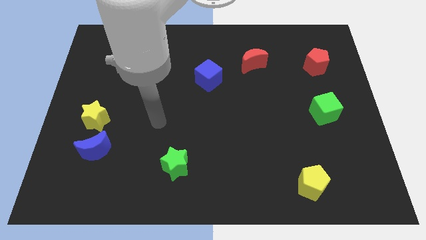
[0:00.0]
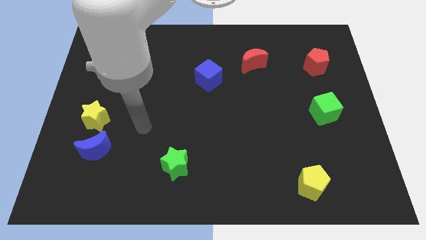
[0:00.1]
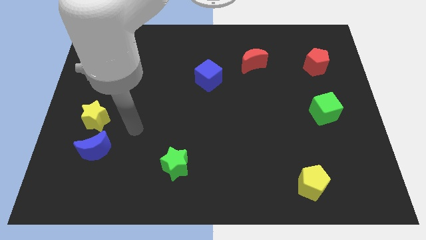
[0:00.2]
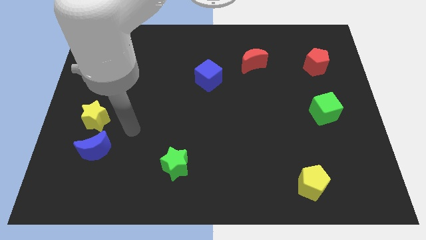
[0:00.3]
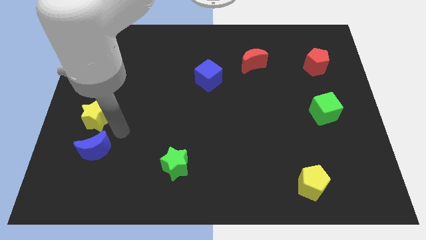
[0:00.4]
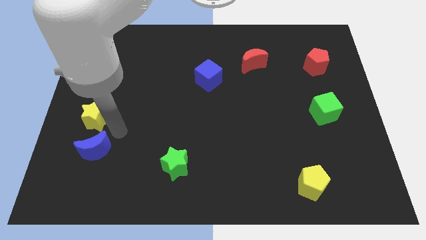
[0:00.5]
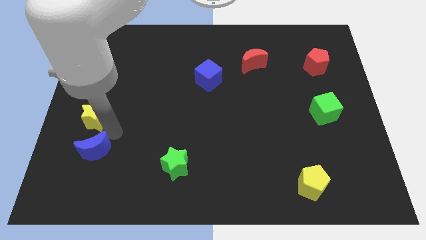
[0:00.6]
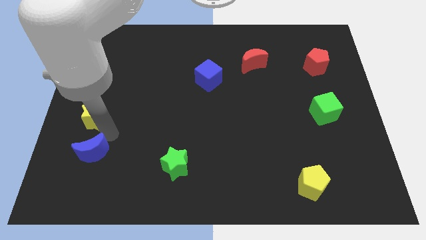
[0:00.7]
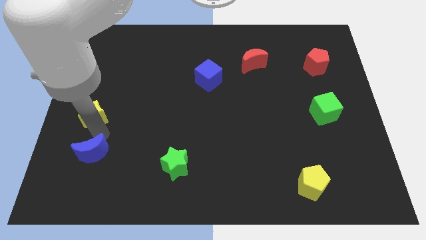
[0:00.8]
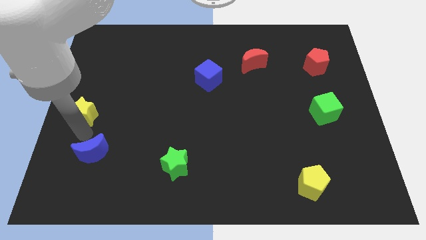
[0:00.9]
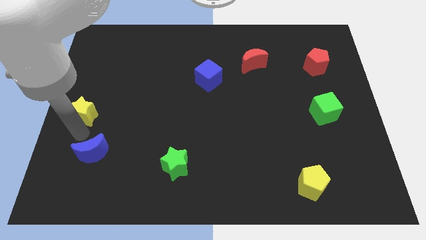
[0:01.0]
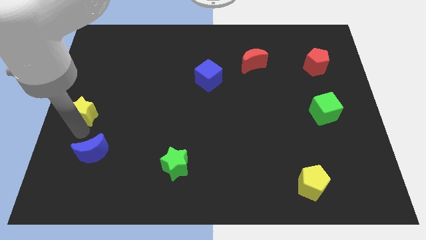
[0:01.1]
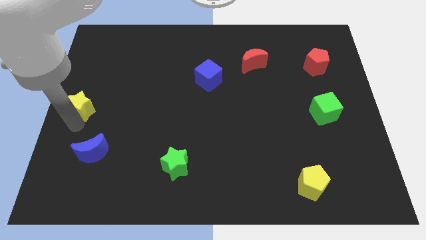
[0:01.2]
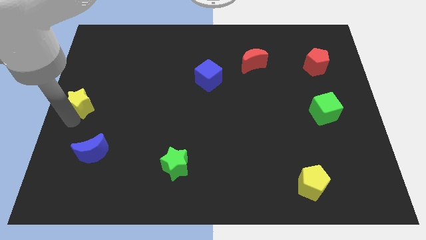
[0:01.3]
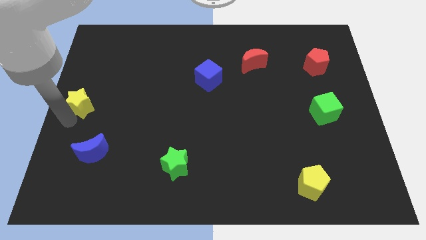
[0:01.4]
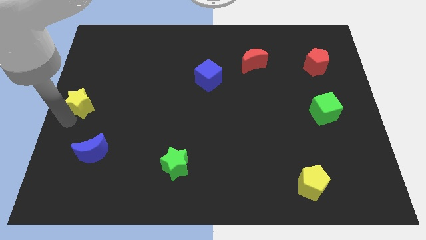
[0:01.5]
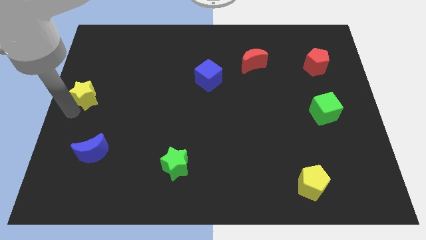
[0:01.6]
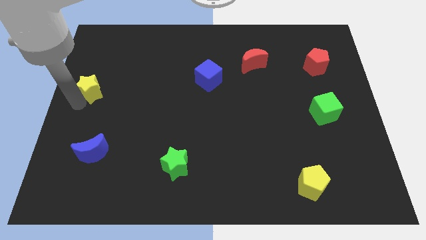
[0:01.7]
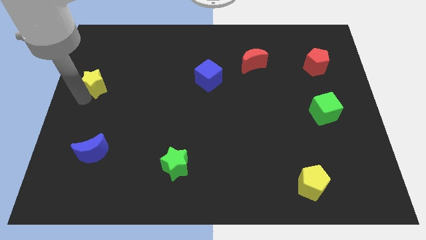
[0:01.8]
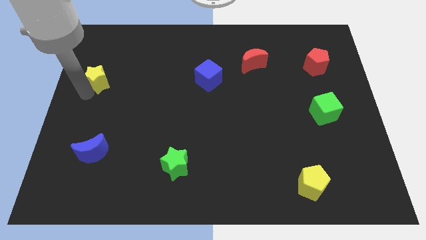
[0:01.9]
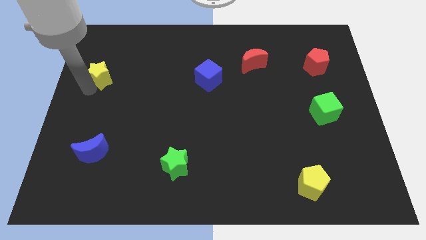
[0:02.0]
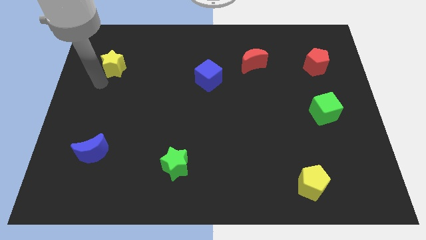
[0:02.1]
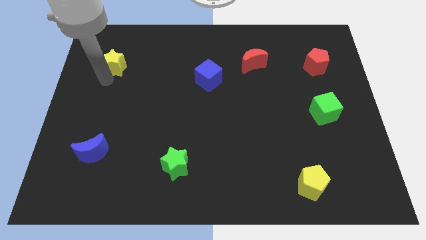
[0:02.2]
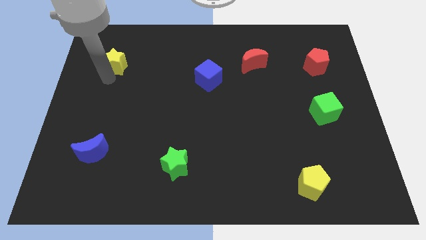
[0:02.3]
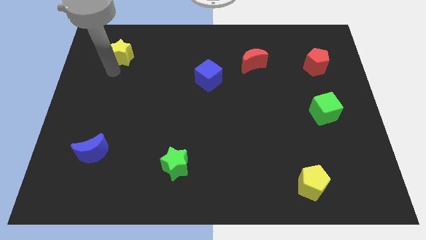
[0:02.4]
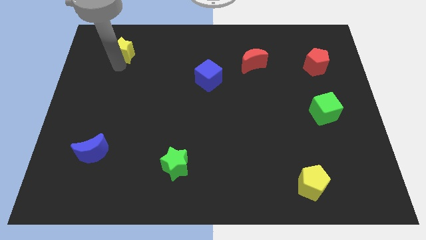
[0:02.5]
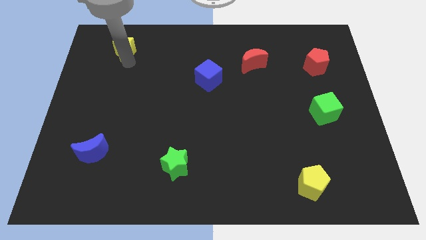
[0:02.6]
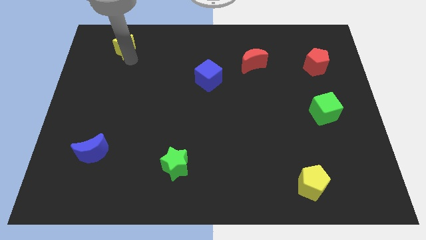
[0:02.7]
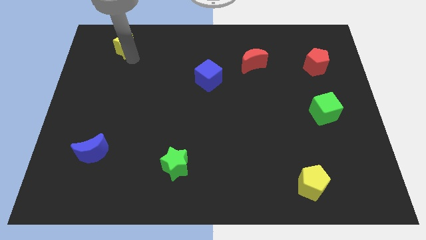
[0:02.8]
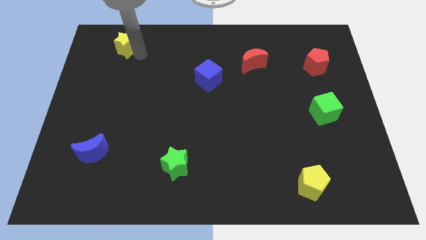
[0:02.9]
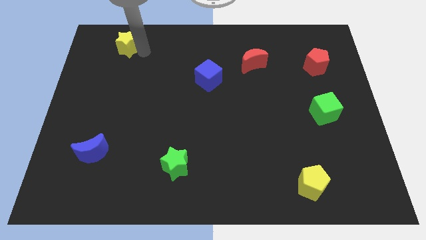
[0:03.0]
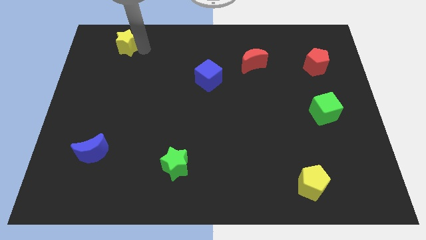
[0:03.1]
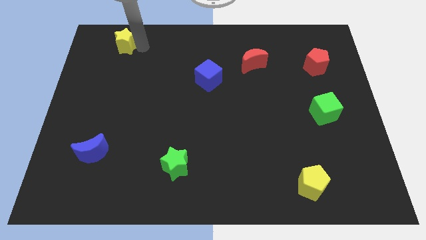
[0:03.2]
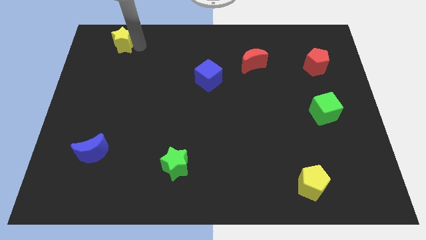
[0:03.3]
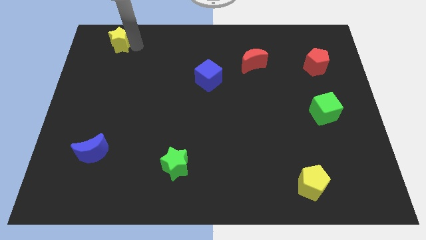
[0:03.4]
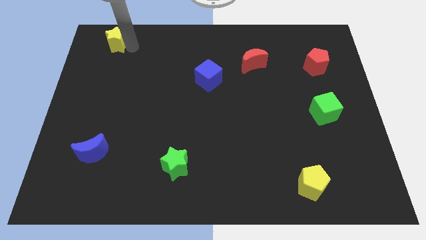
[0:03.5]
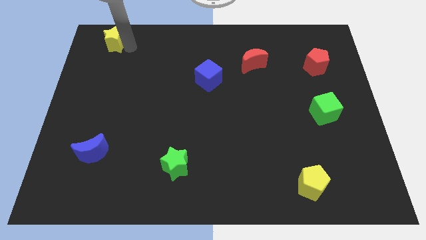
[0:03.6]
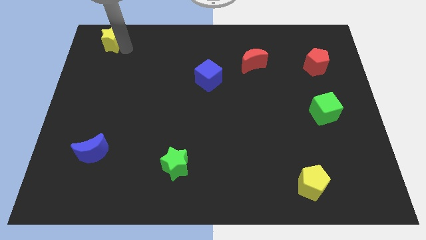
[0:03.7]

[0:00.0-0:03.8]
move the yellow star towards the top left side of the board

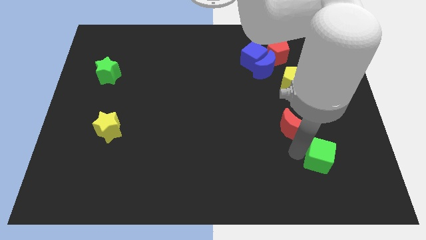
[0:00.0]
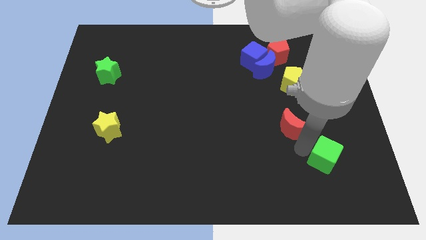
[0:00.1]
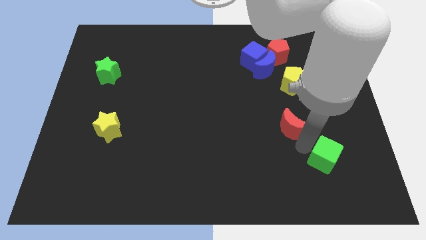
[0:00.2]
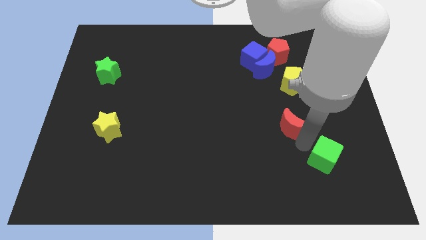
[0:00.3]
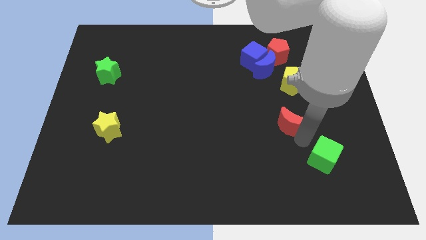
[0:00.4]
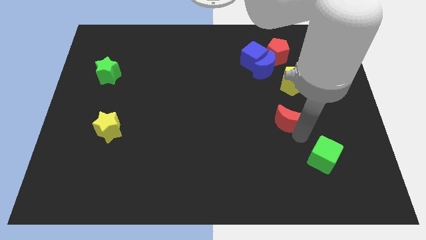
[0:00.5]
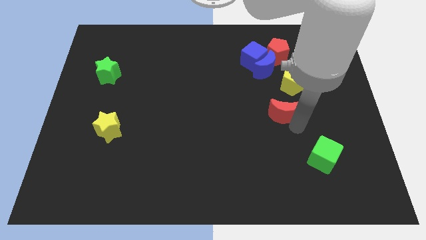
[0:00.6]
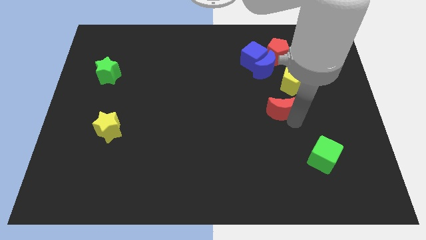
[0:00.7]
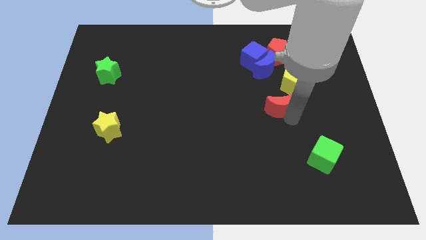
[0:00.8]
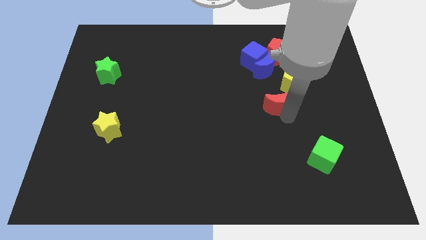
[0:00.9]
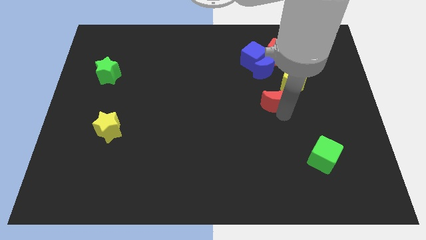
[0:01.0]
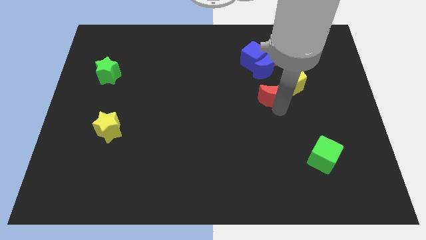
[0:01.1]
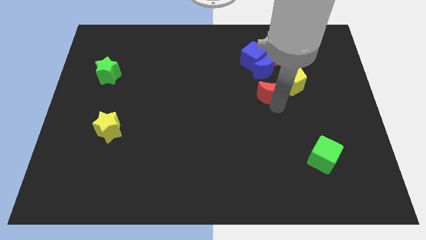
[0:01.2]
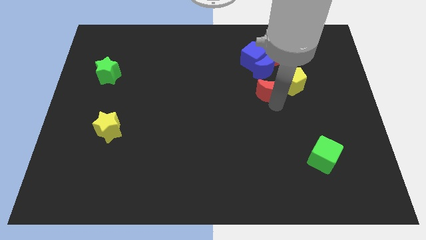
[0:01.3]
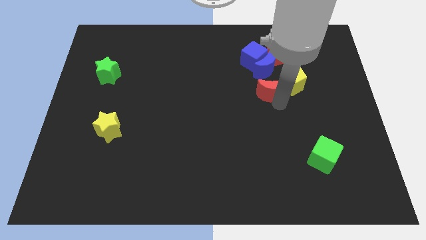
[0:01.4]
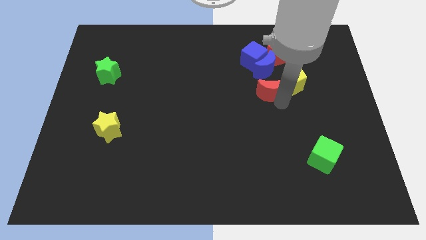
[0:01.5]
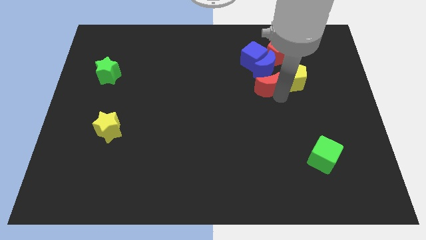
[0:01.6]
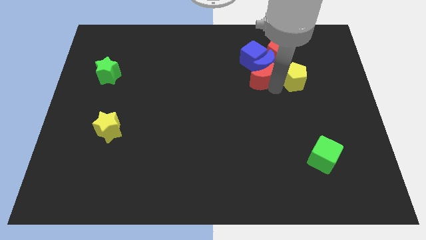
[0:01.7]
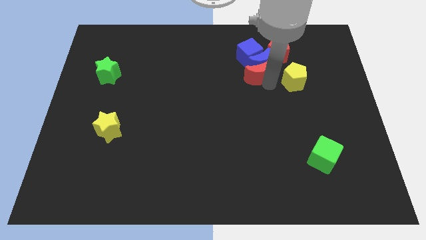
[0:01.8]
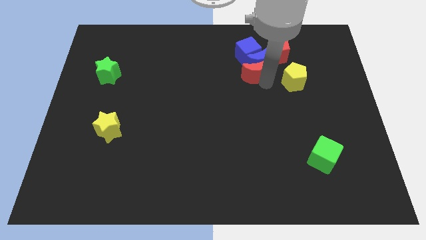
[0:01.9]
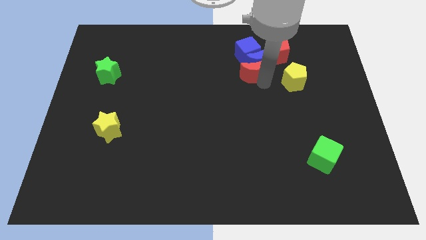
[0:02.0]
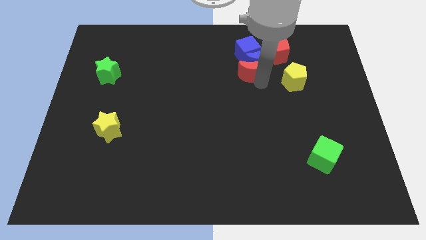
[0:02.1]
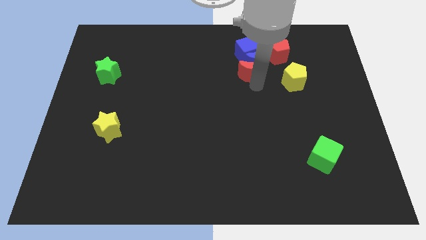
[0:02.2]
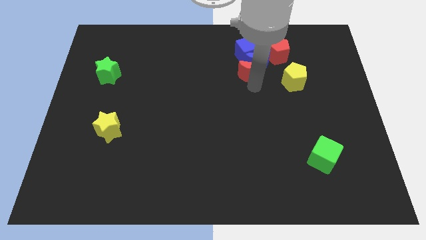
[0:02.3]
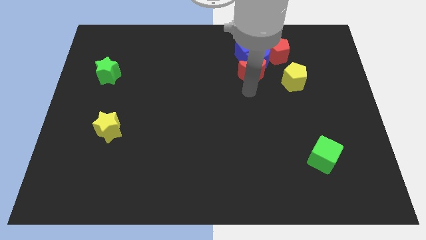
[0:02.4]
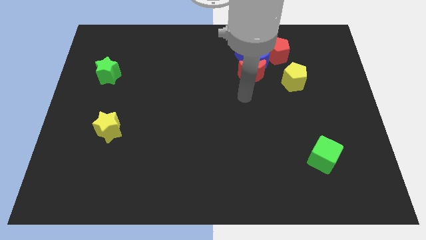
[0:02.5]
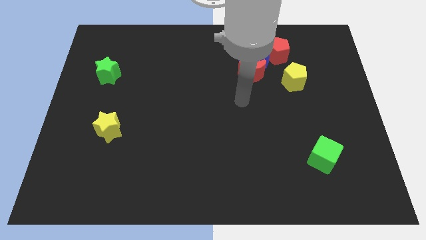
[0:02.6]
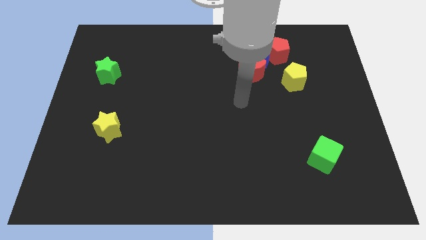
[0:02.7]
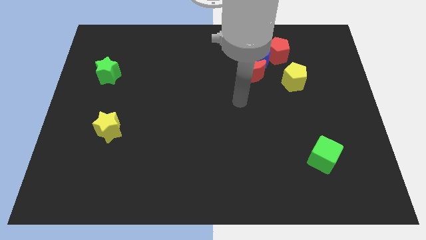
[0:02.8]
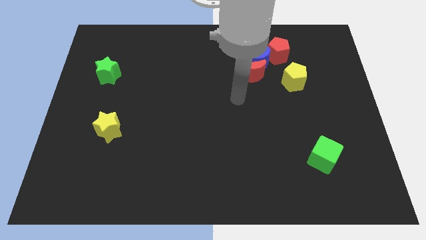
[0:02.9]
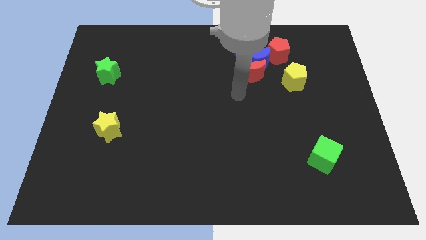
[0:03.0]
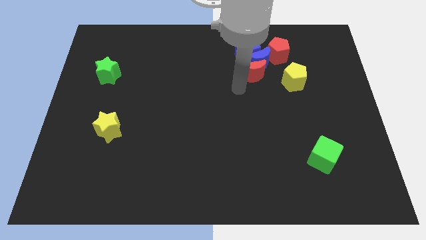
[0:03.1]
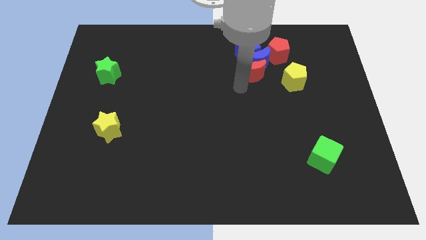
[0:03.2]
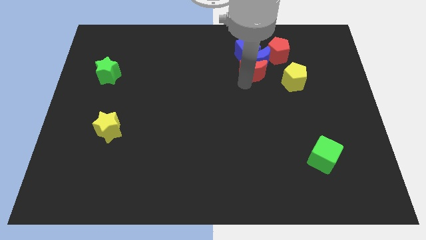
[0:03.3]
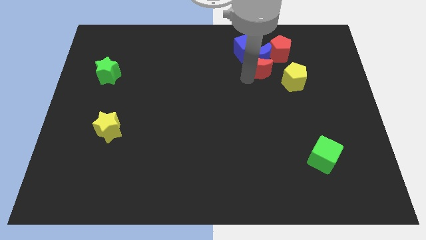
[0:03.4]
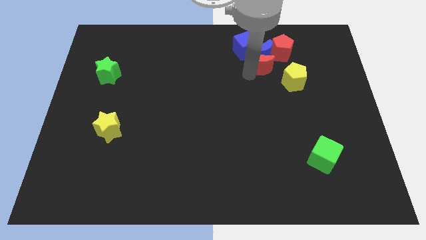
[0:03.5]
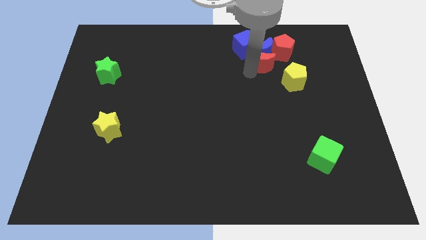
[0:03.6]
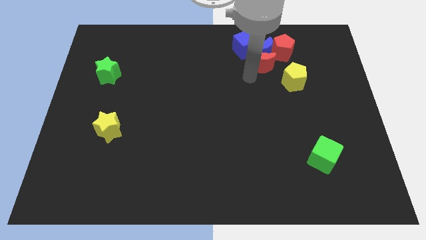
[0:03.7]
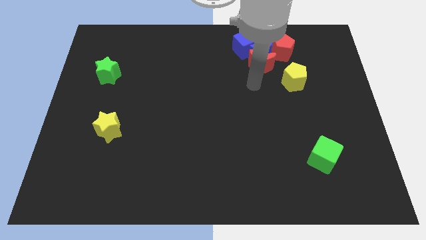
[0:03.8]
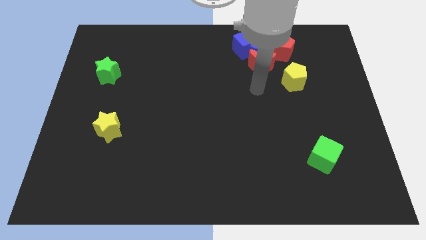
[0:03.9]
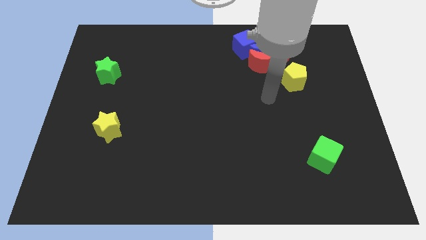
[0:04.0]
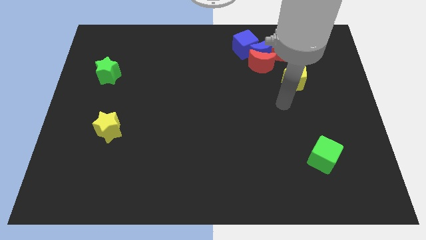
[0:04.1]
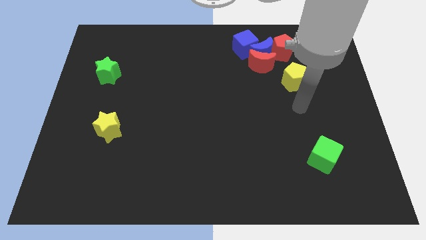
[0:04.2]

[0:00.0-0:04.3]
move the red moon to bottom of the blue moon

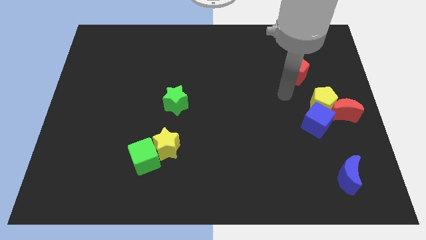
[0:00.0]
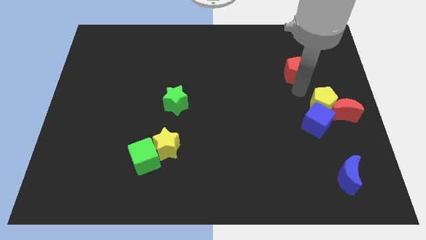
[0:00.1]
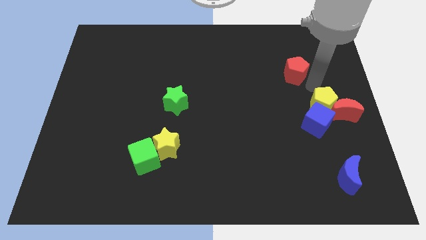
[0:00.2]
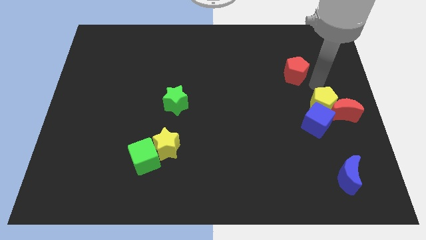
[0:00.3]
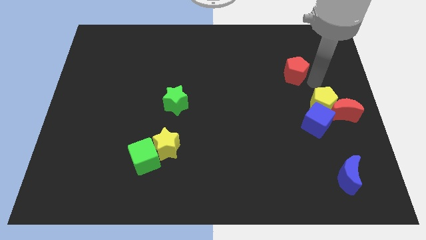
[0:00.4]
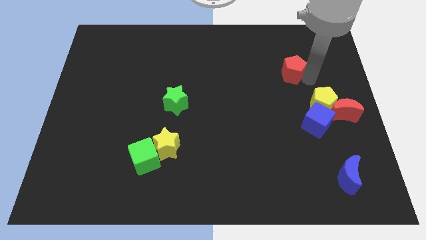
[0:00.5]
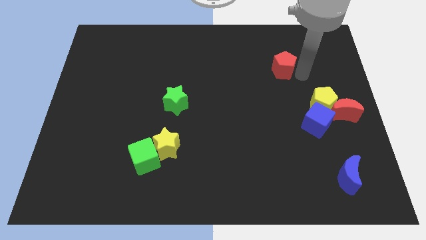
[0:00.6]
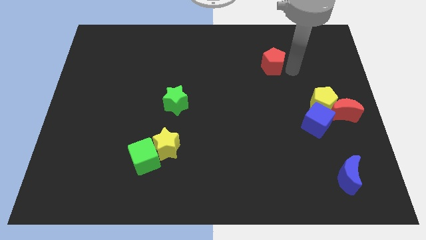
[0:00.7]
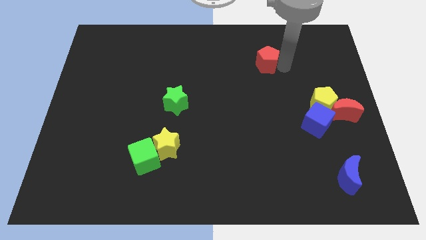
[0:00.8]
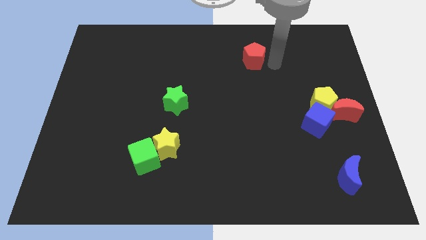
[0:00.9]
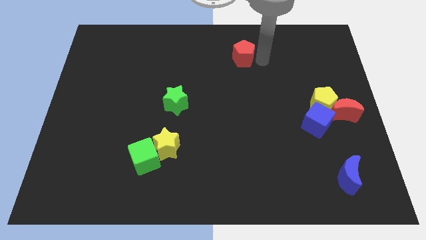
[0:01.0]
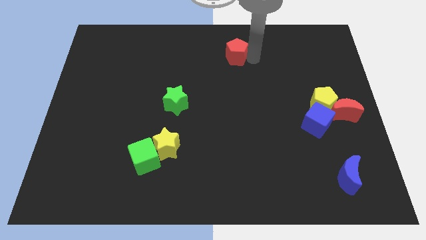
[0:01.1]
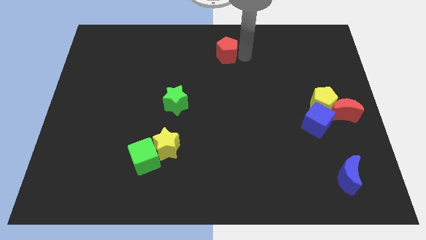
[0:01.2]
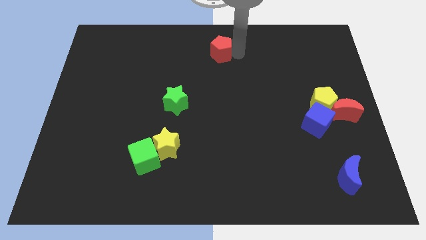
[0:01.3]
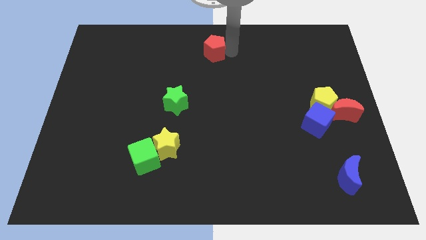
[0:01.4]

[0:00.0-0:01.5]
place red pentagon to the top center of the board
